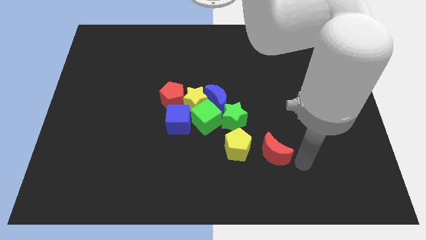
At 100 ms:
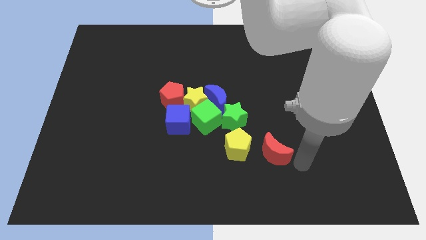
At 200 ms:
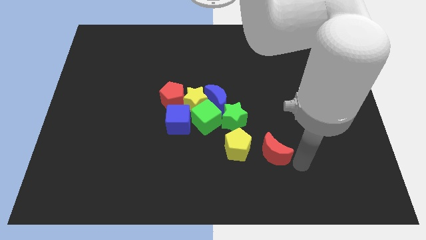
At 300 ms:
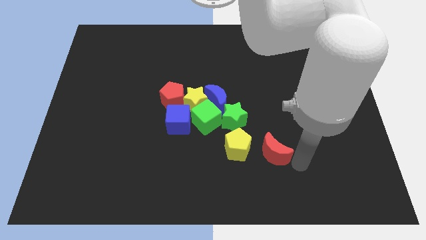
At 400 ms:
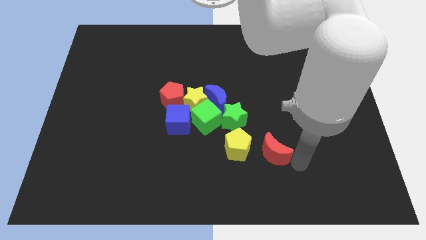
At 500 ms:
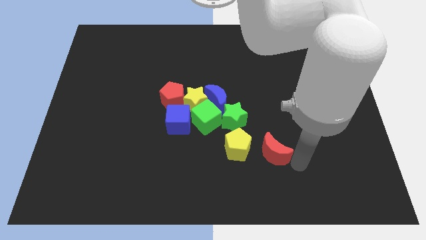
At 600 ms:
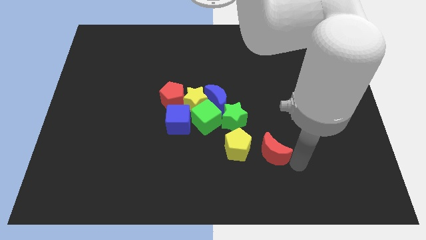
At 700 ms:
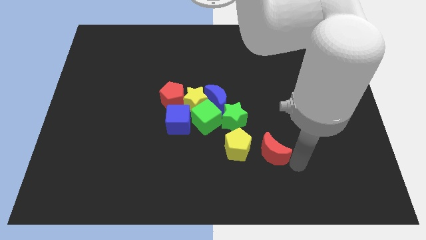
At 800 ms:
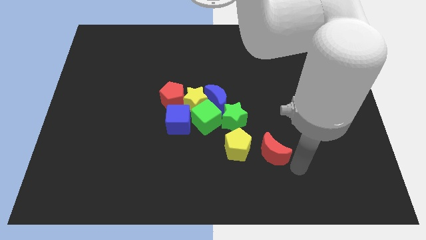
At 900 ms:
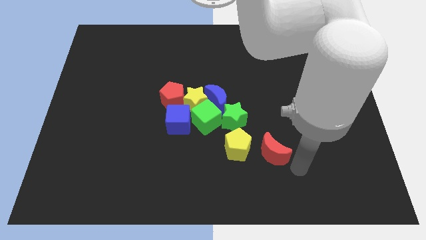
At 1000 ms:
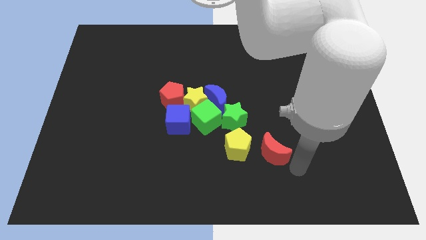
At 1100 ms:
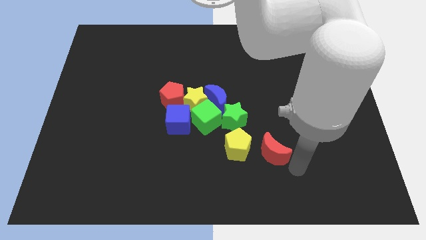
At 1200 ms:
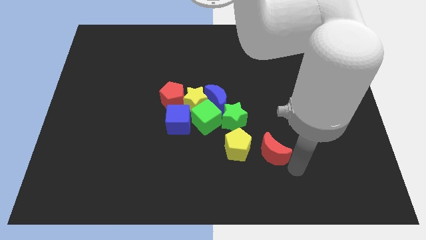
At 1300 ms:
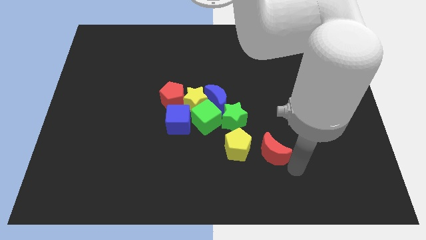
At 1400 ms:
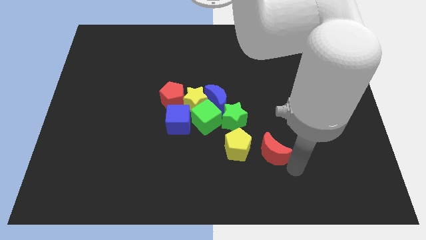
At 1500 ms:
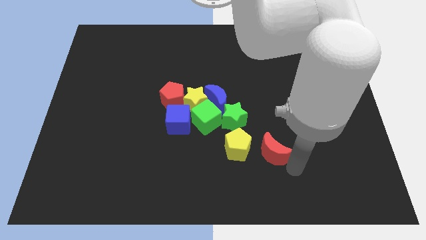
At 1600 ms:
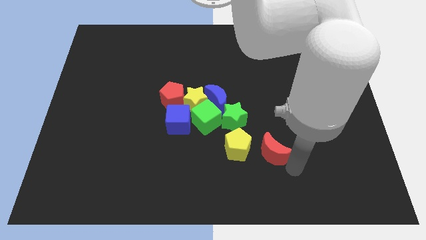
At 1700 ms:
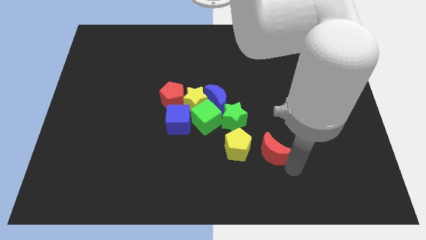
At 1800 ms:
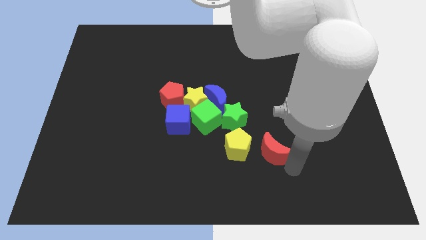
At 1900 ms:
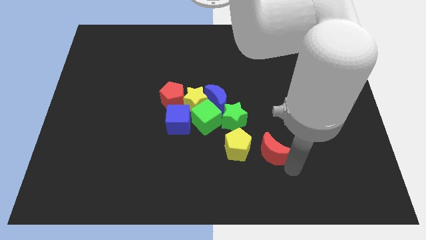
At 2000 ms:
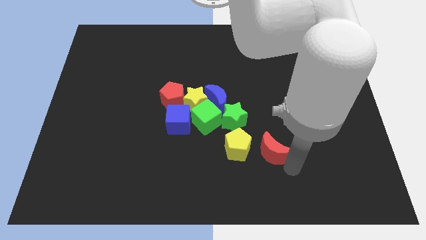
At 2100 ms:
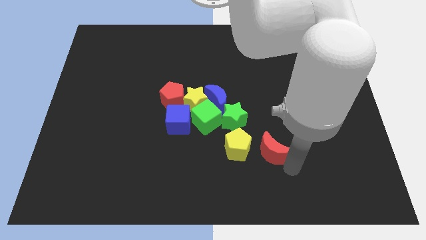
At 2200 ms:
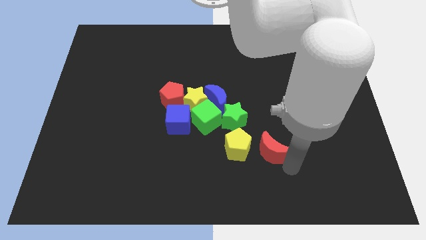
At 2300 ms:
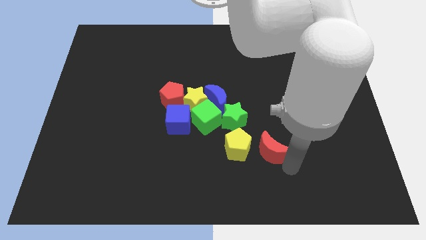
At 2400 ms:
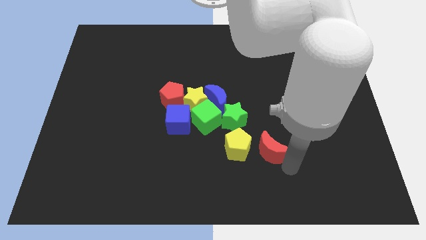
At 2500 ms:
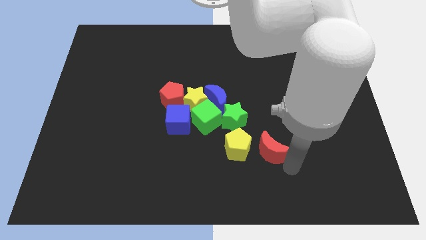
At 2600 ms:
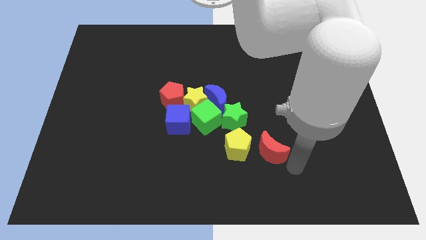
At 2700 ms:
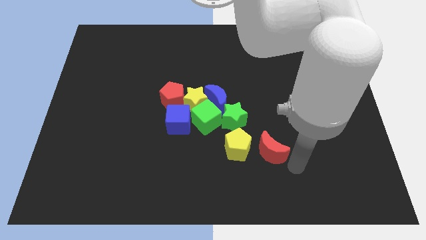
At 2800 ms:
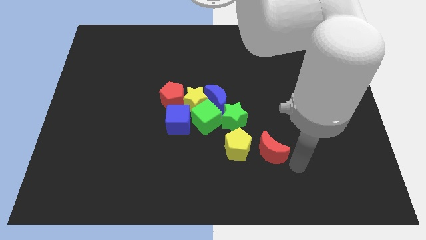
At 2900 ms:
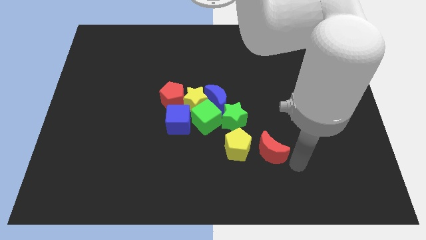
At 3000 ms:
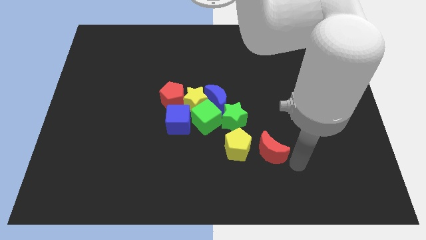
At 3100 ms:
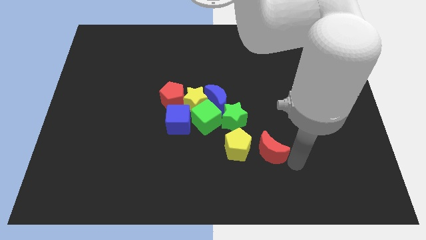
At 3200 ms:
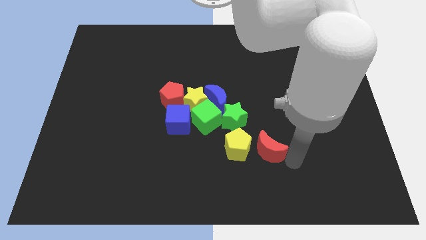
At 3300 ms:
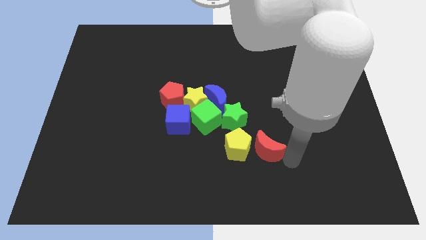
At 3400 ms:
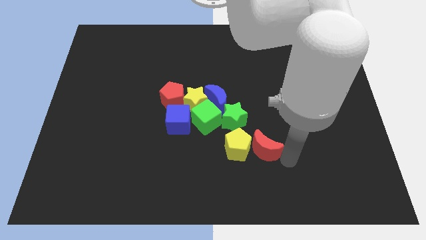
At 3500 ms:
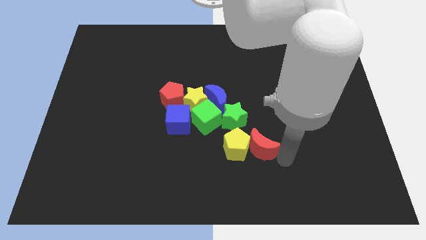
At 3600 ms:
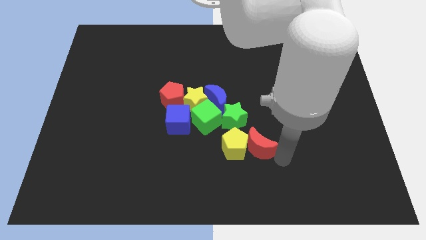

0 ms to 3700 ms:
push the red crescent into the yellow pentagon

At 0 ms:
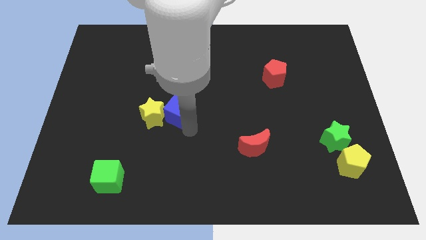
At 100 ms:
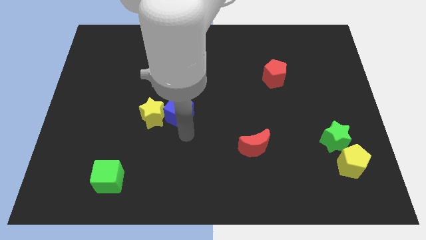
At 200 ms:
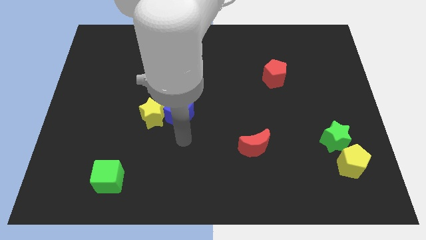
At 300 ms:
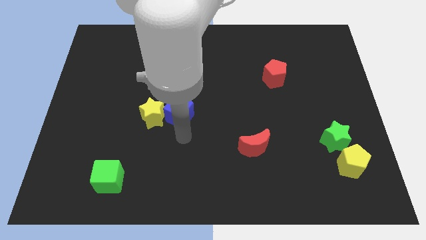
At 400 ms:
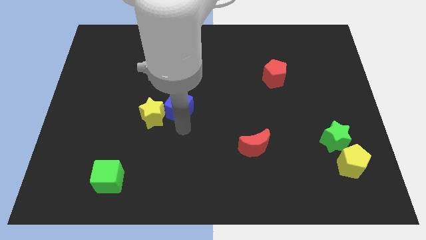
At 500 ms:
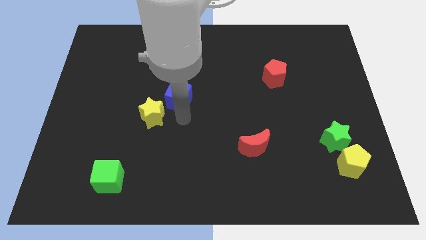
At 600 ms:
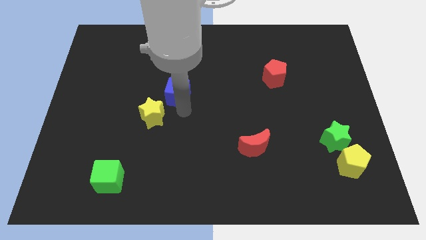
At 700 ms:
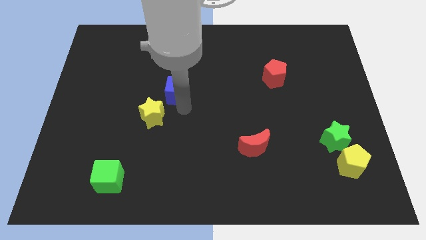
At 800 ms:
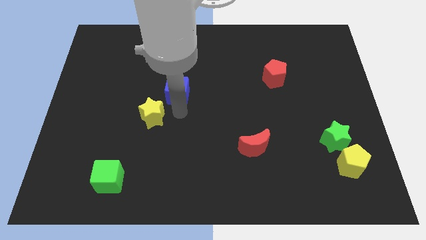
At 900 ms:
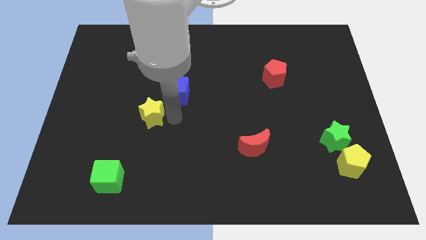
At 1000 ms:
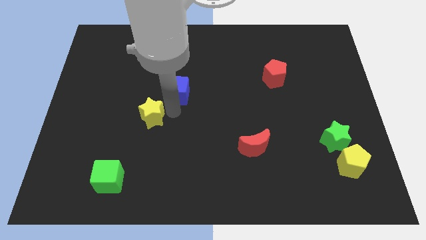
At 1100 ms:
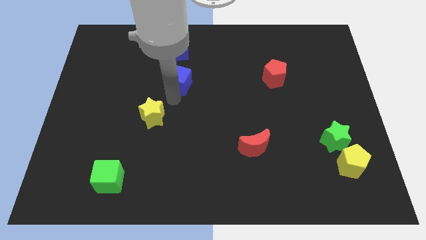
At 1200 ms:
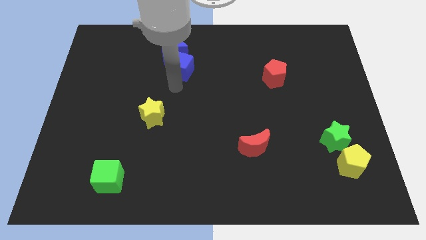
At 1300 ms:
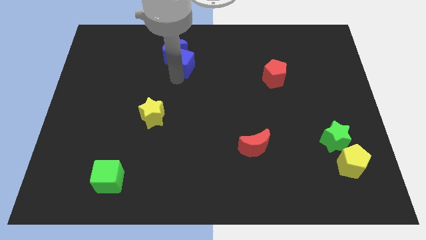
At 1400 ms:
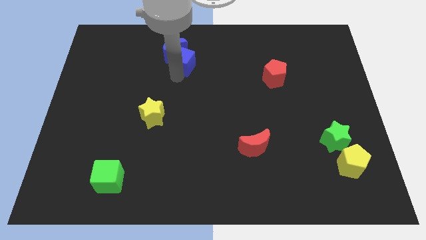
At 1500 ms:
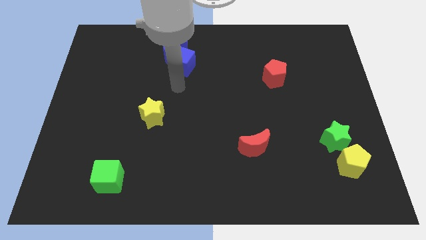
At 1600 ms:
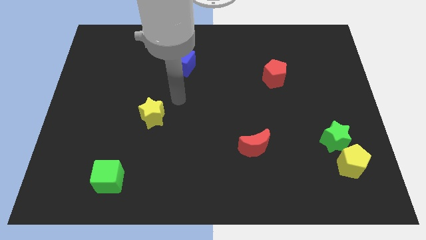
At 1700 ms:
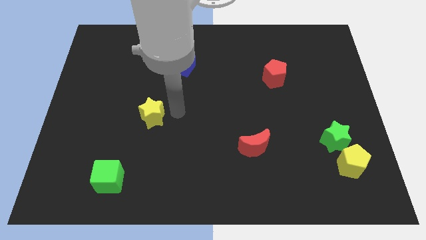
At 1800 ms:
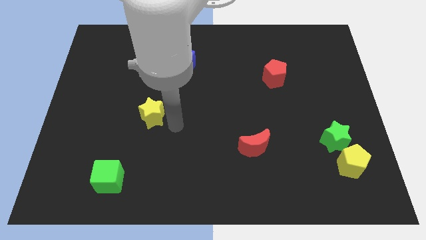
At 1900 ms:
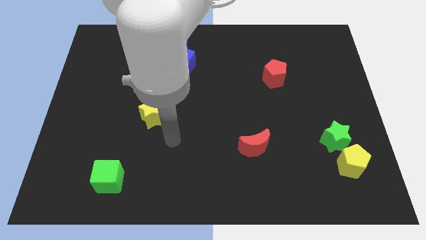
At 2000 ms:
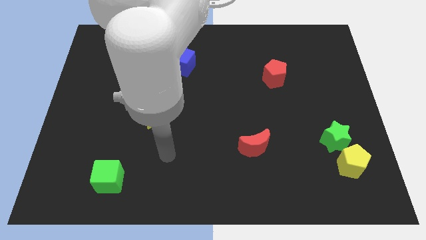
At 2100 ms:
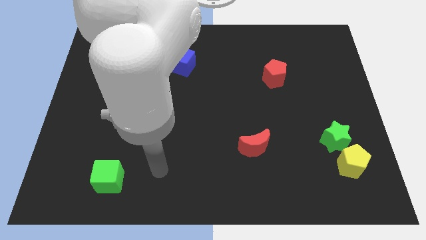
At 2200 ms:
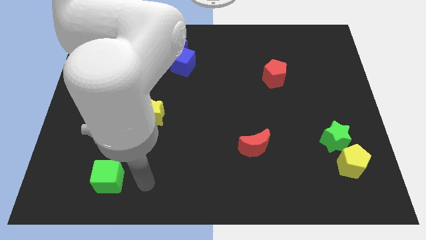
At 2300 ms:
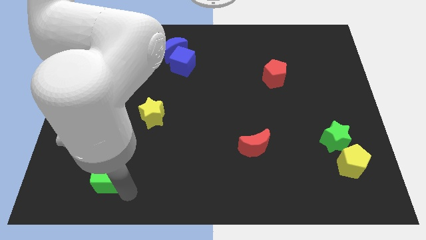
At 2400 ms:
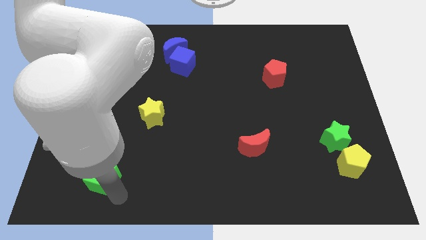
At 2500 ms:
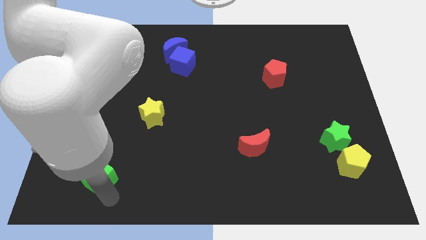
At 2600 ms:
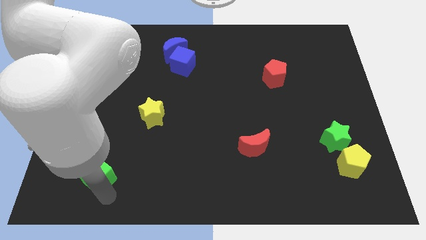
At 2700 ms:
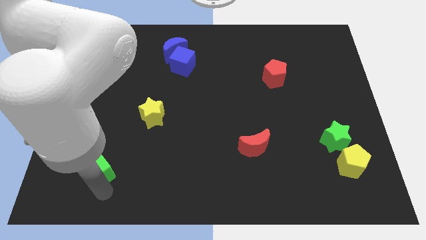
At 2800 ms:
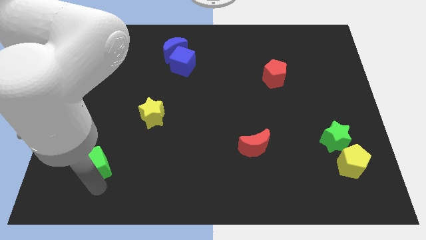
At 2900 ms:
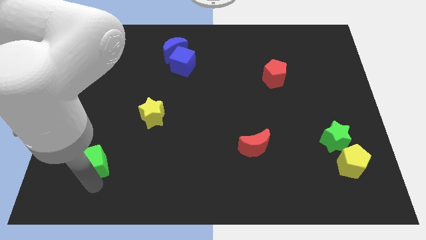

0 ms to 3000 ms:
place your arm below green cube

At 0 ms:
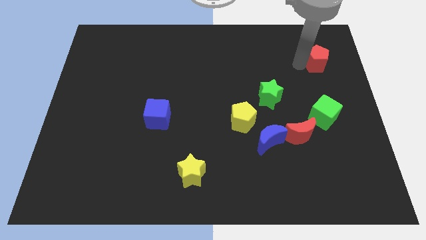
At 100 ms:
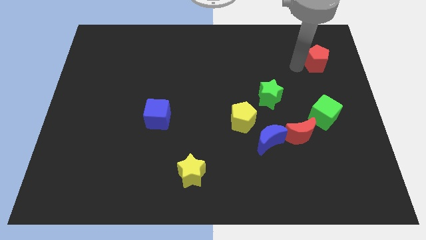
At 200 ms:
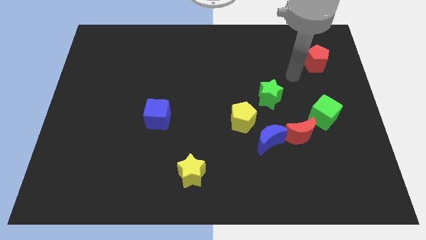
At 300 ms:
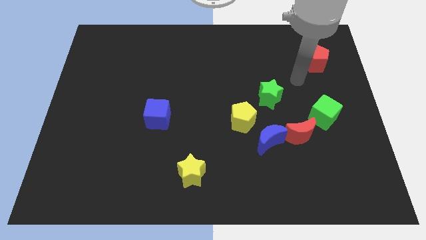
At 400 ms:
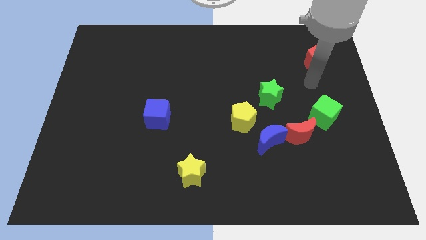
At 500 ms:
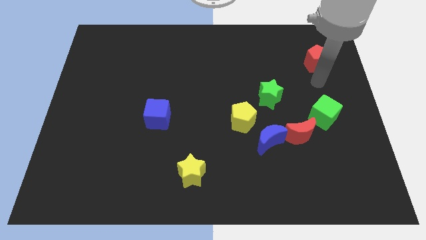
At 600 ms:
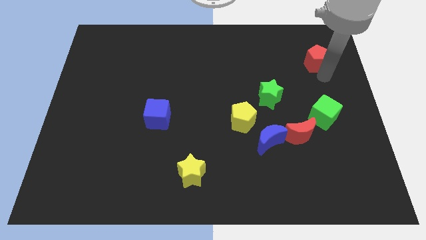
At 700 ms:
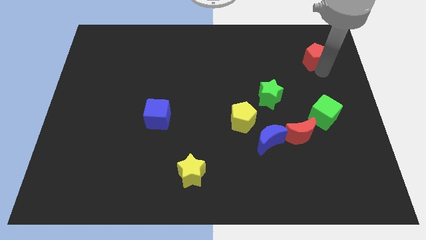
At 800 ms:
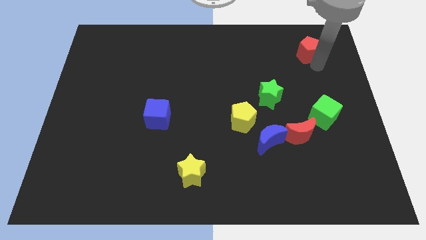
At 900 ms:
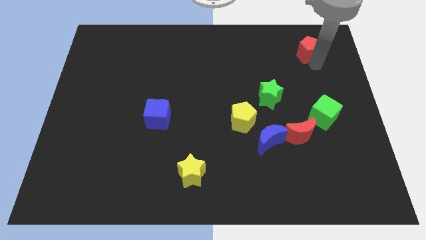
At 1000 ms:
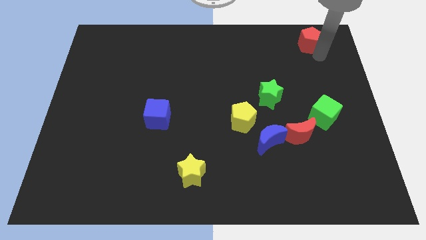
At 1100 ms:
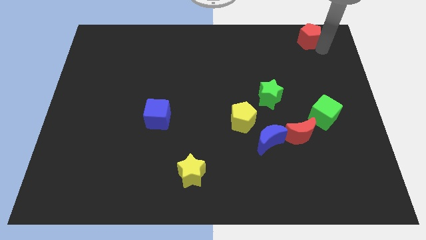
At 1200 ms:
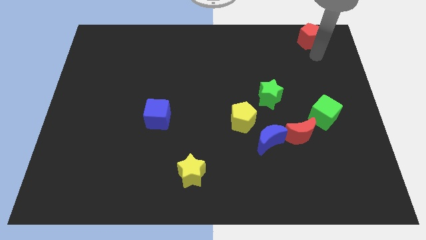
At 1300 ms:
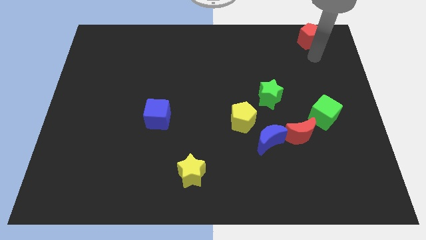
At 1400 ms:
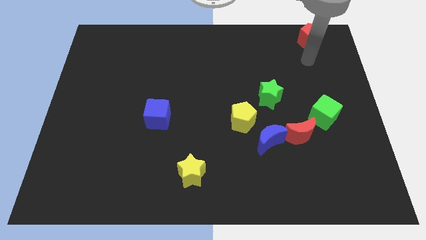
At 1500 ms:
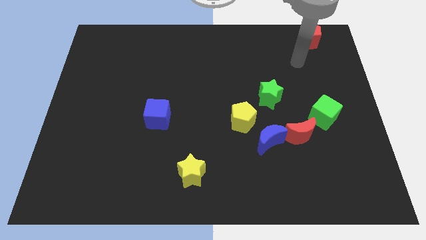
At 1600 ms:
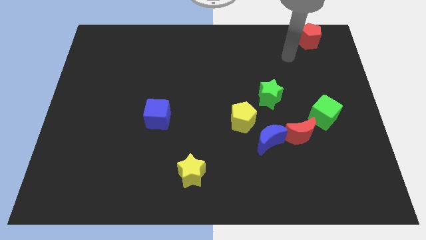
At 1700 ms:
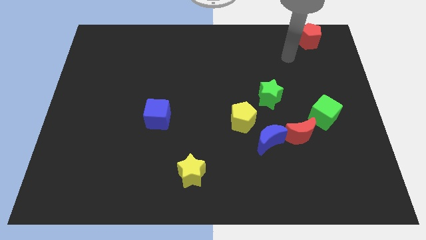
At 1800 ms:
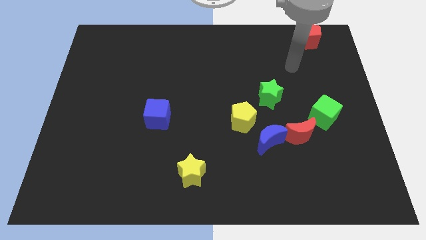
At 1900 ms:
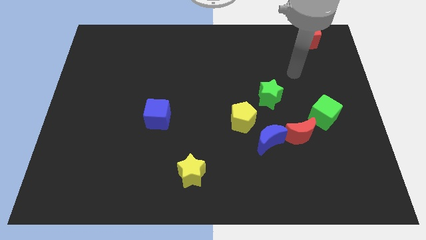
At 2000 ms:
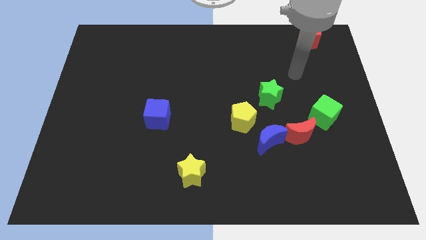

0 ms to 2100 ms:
move the red pentagon slightly upwards

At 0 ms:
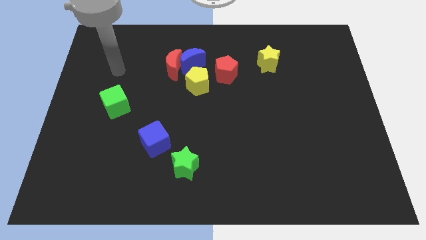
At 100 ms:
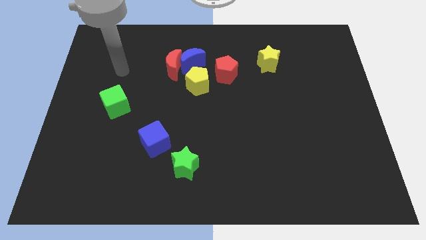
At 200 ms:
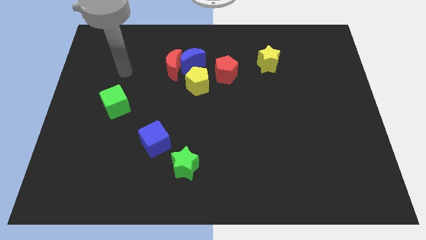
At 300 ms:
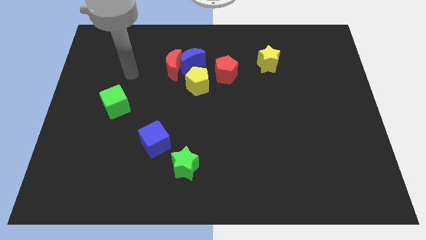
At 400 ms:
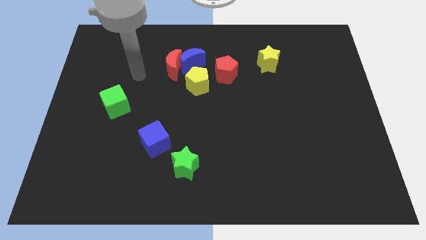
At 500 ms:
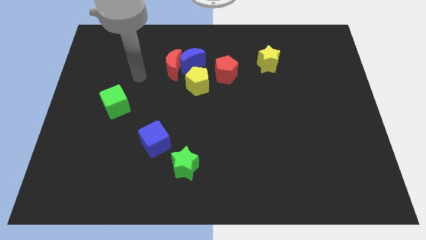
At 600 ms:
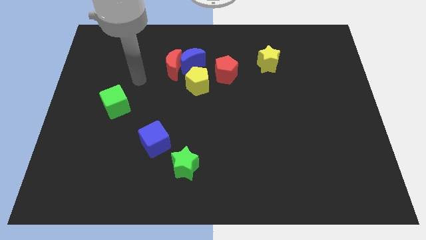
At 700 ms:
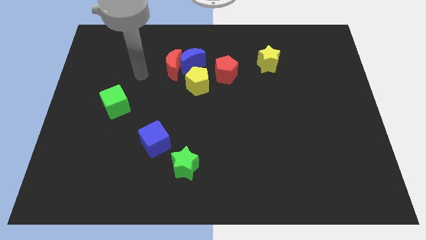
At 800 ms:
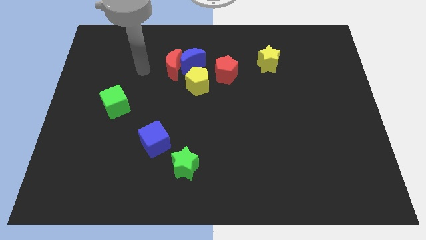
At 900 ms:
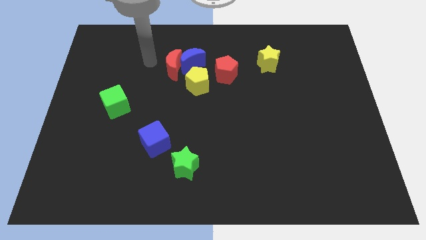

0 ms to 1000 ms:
place hand on the left side of red crescent
